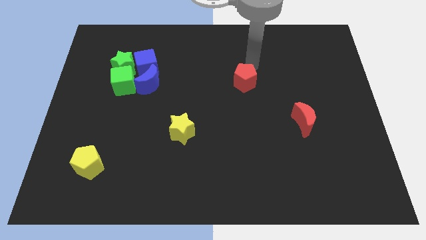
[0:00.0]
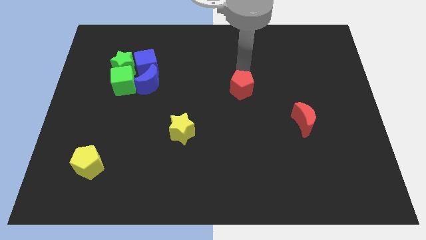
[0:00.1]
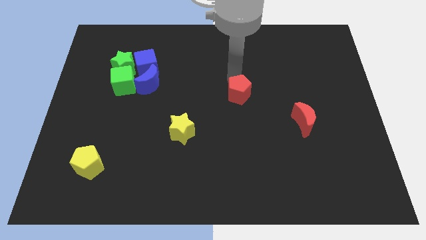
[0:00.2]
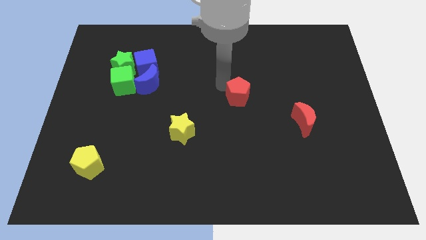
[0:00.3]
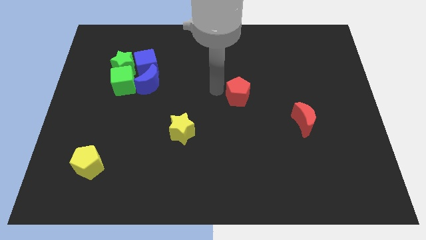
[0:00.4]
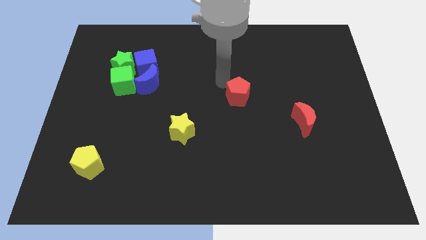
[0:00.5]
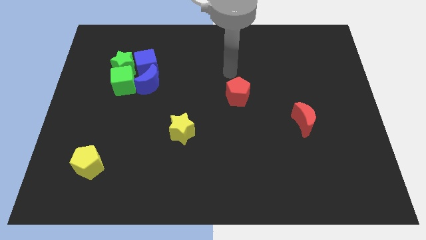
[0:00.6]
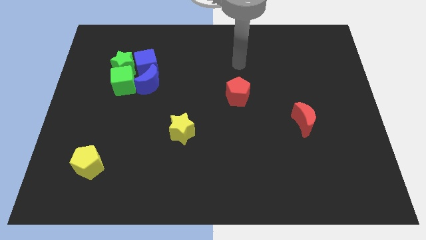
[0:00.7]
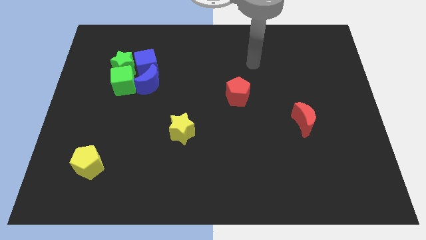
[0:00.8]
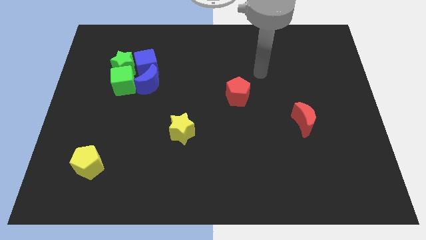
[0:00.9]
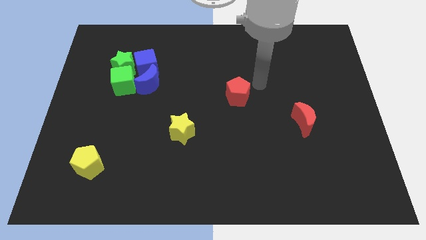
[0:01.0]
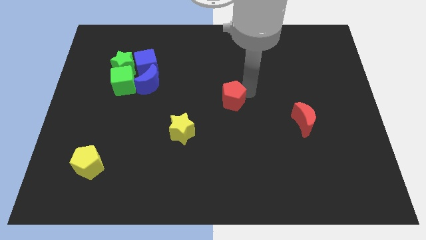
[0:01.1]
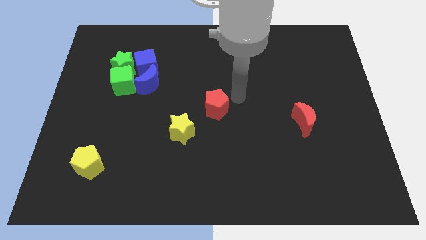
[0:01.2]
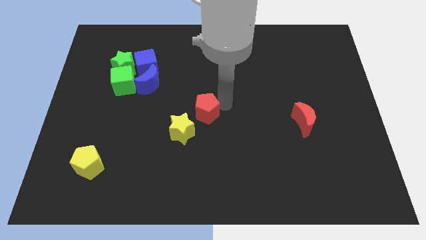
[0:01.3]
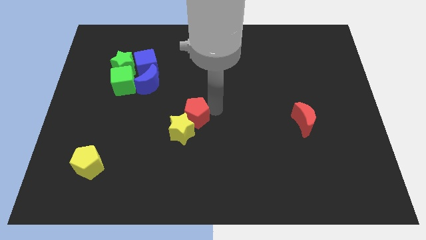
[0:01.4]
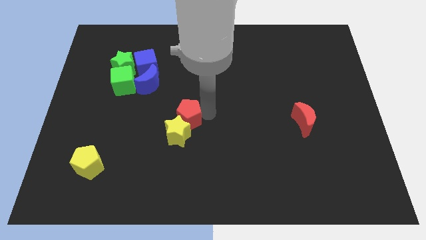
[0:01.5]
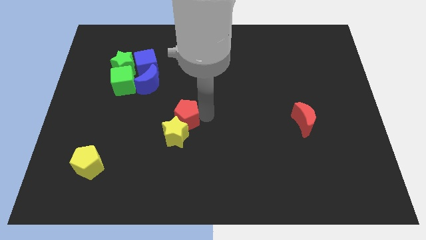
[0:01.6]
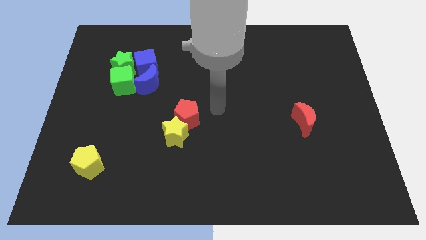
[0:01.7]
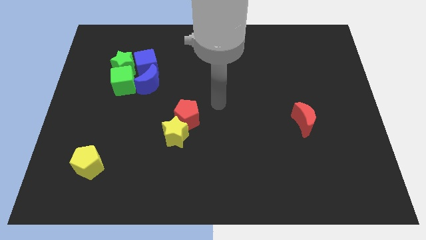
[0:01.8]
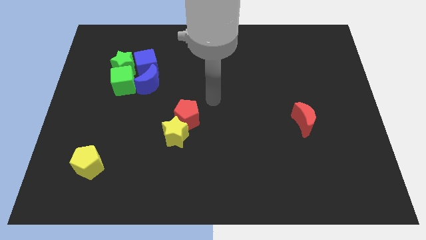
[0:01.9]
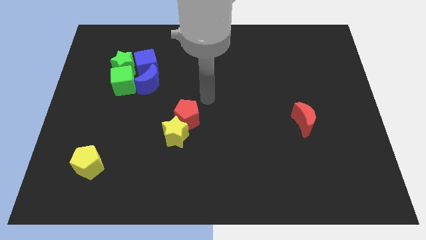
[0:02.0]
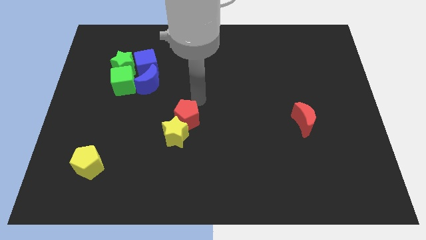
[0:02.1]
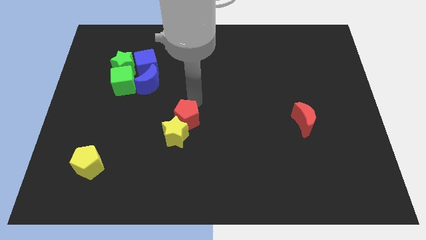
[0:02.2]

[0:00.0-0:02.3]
move the red pentagon above the yellow star

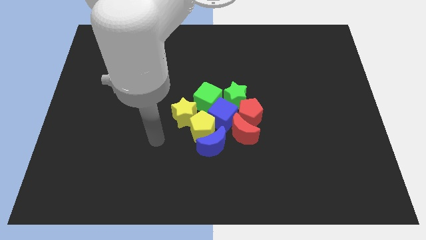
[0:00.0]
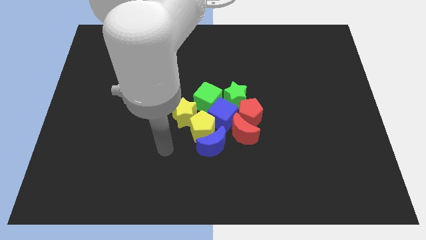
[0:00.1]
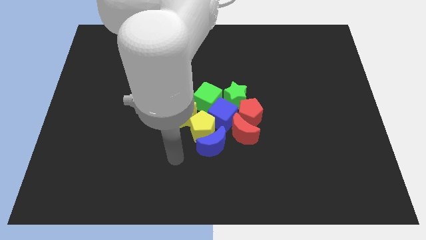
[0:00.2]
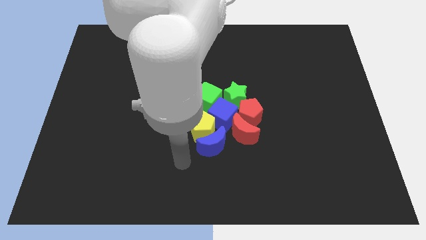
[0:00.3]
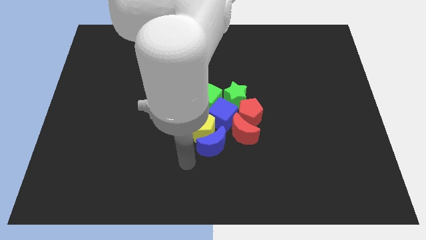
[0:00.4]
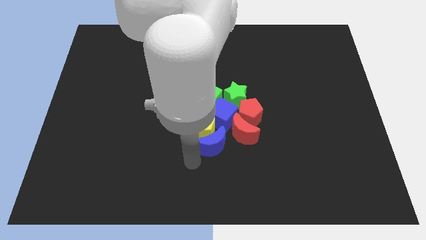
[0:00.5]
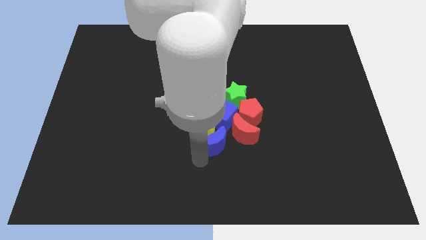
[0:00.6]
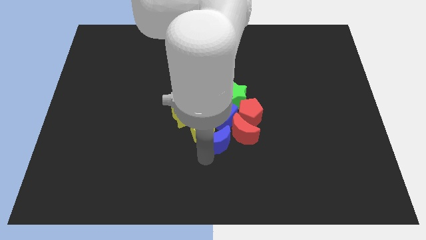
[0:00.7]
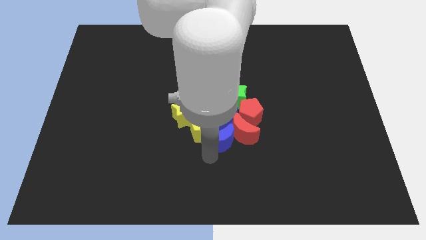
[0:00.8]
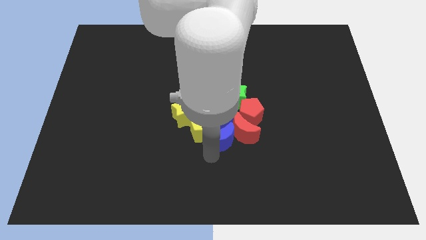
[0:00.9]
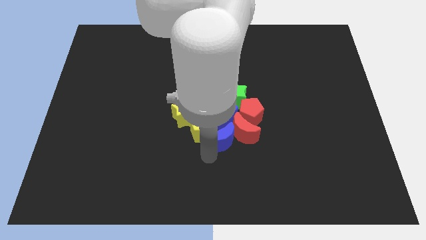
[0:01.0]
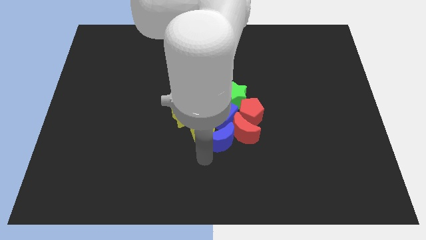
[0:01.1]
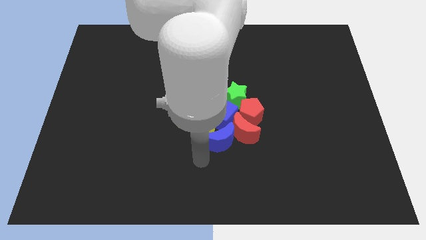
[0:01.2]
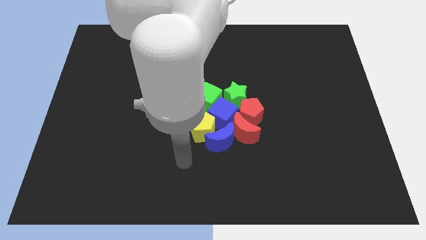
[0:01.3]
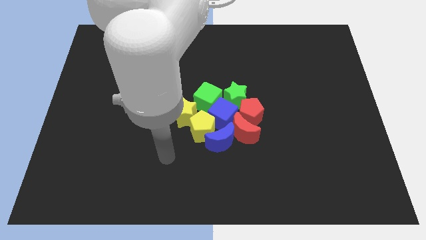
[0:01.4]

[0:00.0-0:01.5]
push the blue crescent into the red crescent

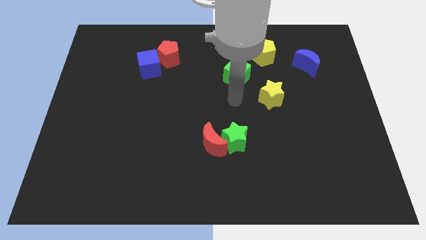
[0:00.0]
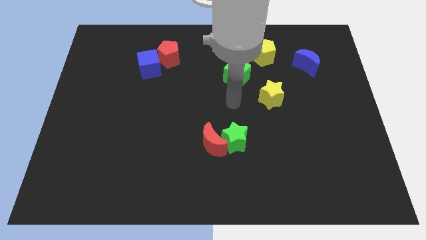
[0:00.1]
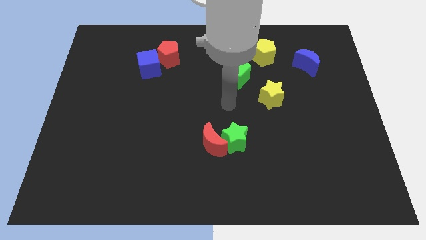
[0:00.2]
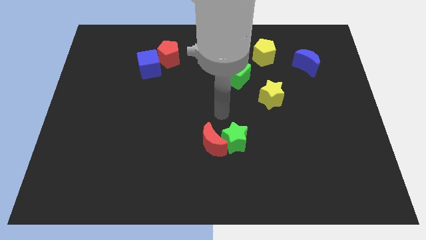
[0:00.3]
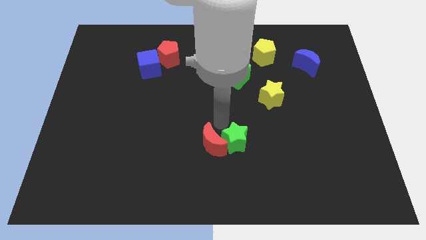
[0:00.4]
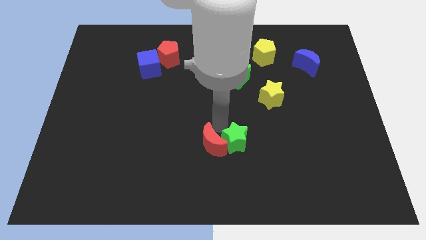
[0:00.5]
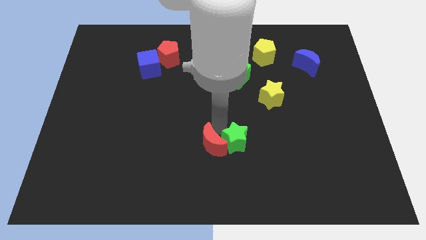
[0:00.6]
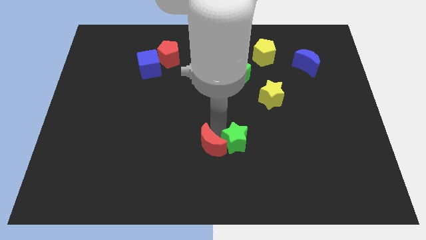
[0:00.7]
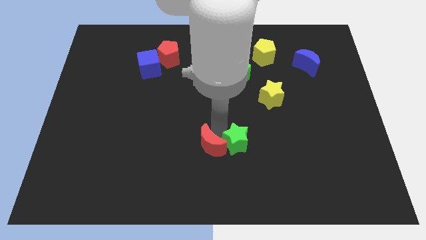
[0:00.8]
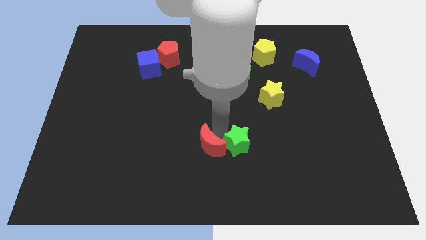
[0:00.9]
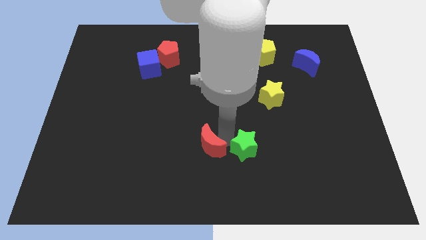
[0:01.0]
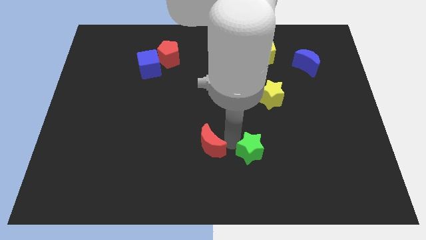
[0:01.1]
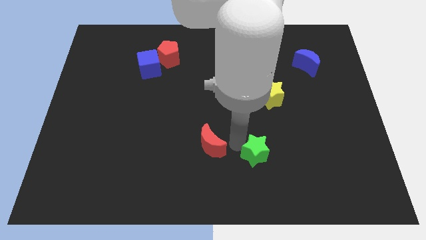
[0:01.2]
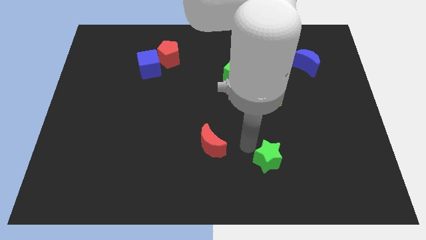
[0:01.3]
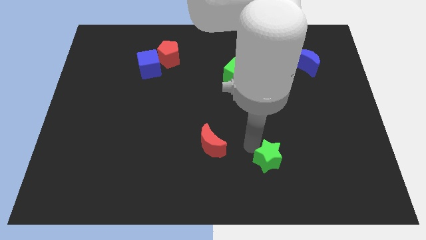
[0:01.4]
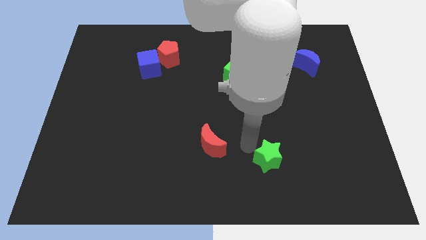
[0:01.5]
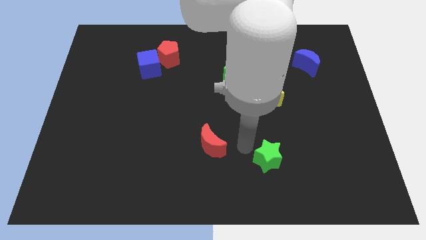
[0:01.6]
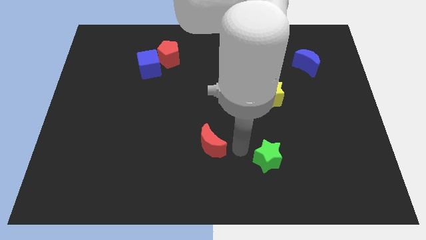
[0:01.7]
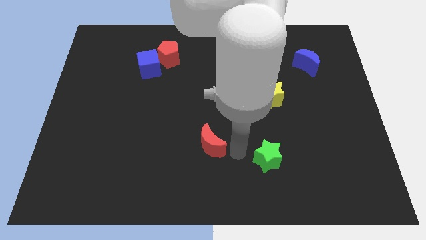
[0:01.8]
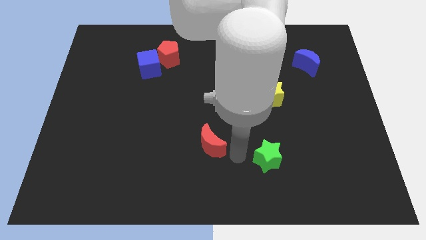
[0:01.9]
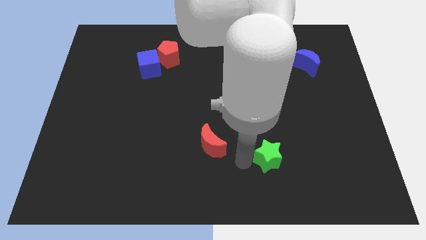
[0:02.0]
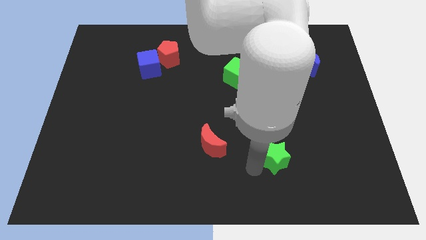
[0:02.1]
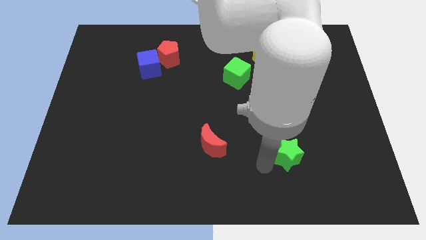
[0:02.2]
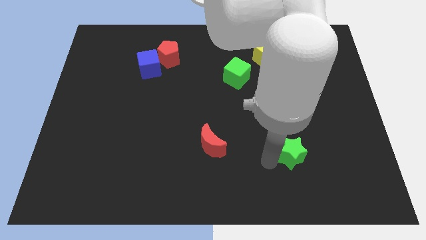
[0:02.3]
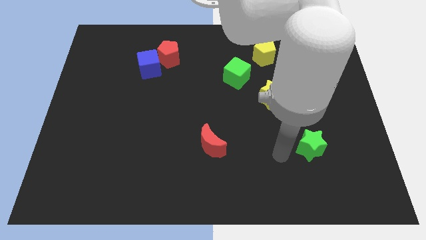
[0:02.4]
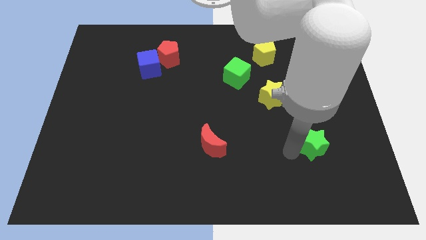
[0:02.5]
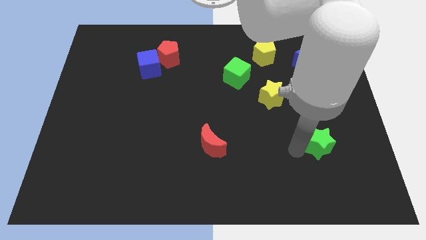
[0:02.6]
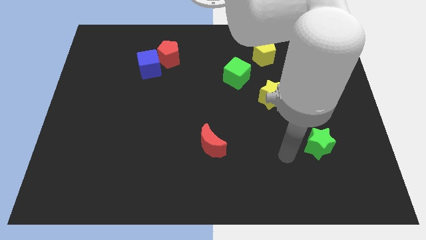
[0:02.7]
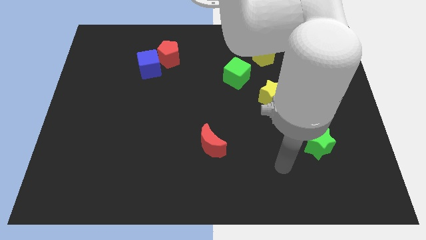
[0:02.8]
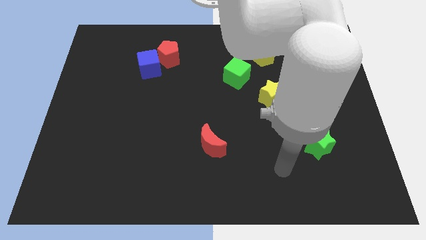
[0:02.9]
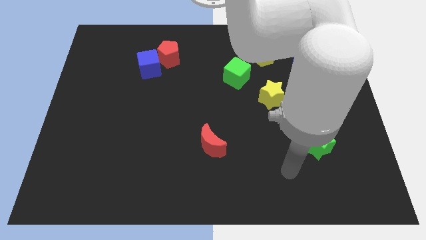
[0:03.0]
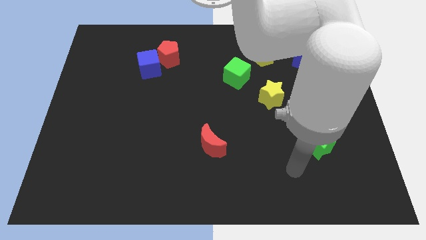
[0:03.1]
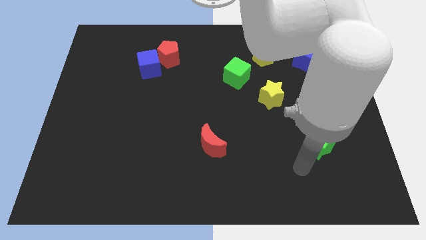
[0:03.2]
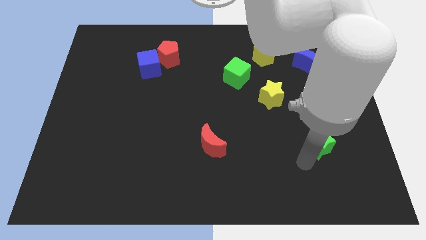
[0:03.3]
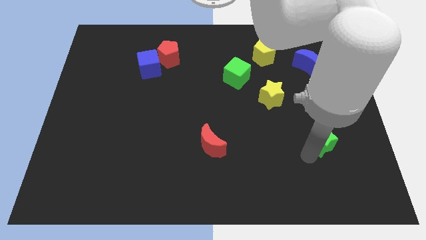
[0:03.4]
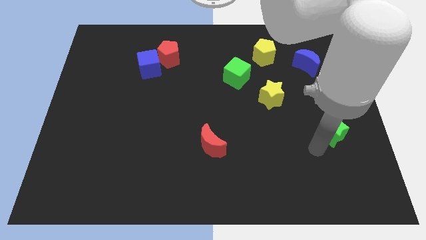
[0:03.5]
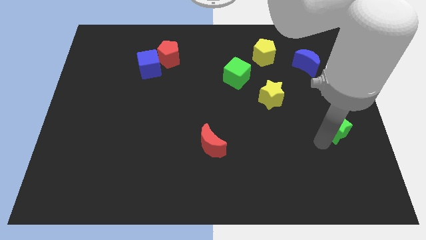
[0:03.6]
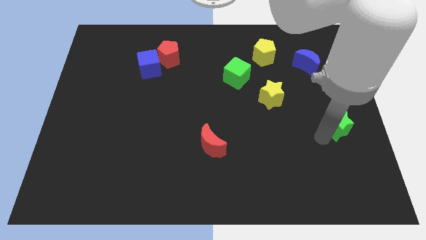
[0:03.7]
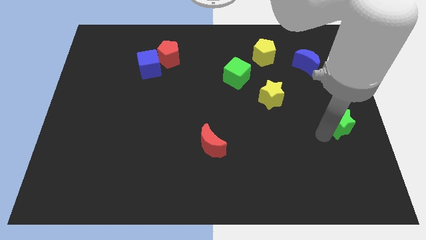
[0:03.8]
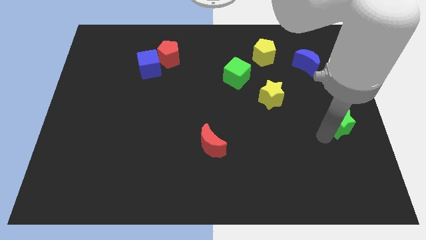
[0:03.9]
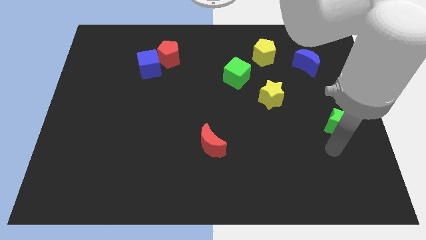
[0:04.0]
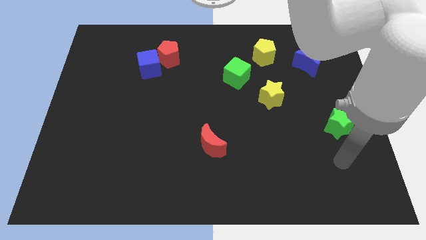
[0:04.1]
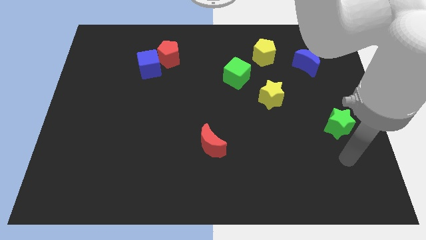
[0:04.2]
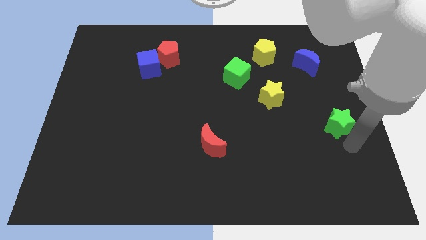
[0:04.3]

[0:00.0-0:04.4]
separate green star from the red moon

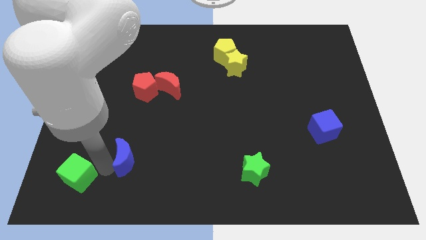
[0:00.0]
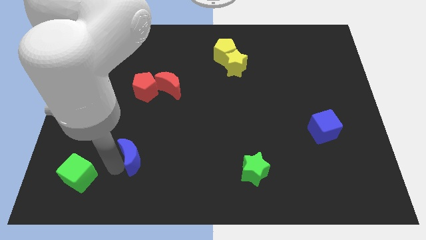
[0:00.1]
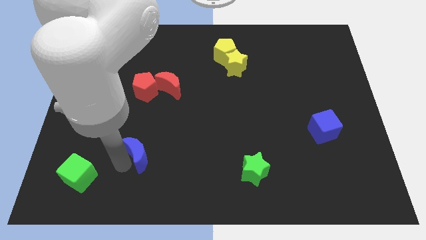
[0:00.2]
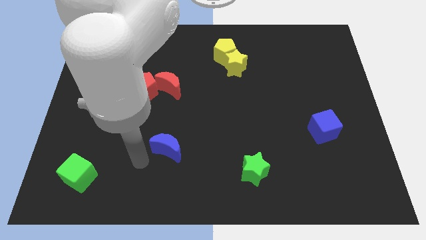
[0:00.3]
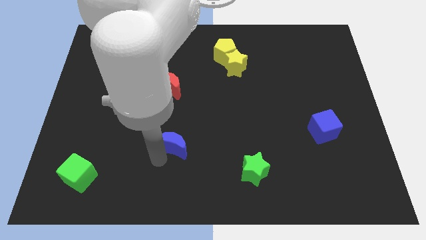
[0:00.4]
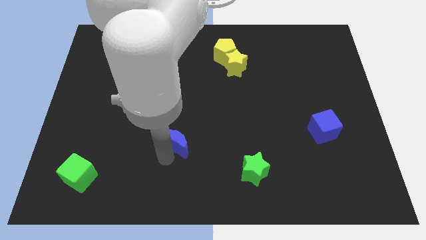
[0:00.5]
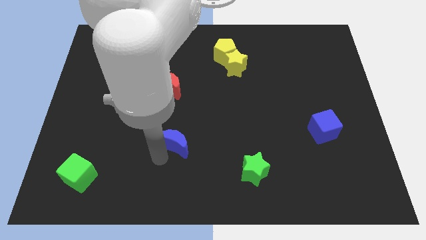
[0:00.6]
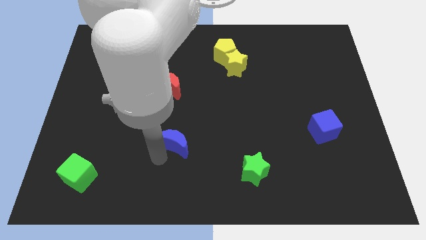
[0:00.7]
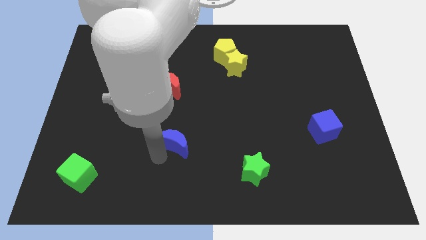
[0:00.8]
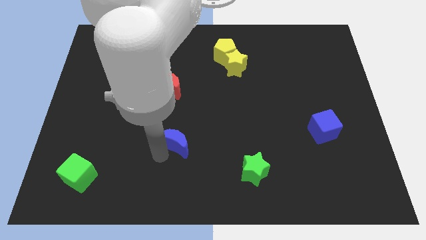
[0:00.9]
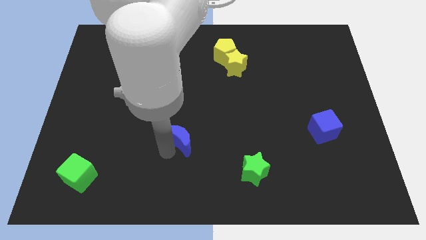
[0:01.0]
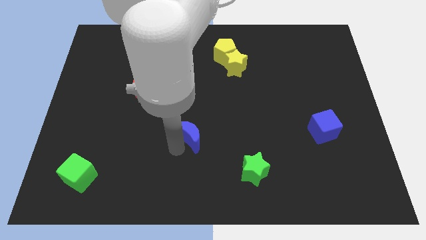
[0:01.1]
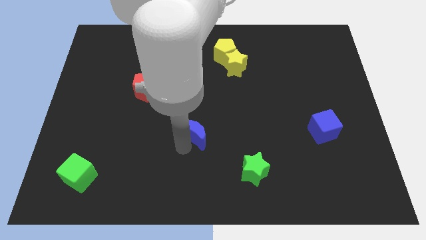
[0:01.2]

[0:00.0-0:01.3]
place the blue moon between the green star and red pentagon
